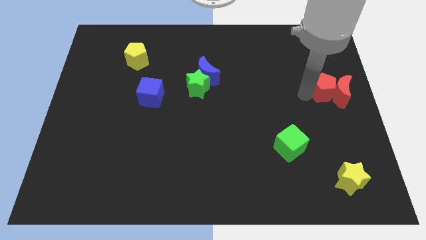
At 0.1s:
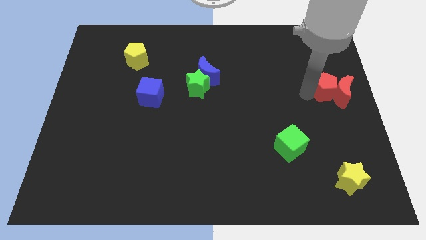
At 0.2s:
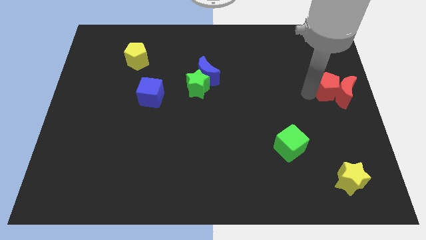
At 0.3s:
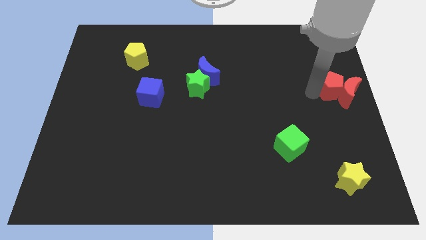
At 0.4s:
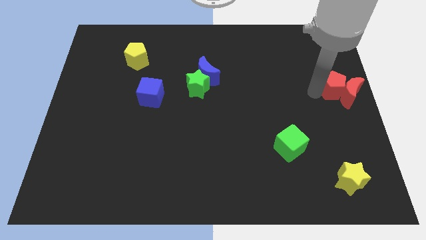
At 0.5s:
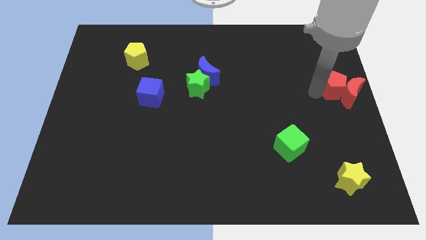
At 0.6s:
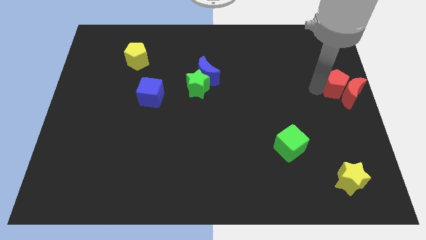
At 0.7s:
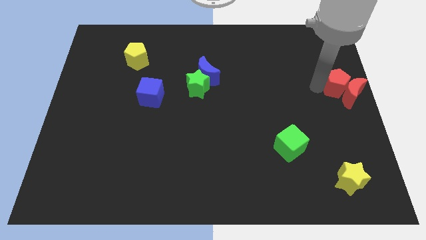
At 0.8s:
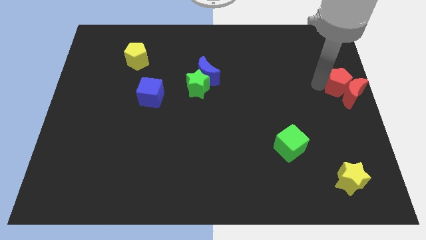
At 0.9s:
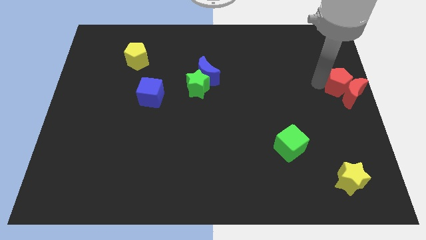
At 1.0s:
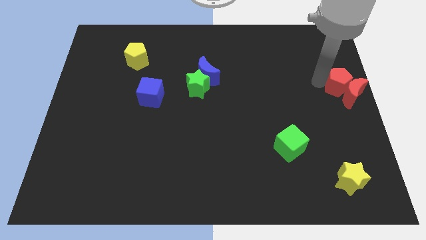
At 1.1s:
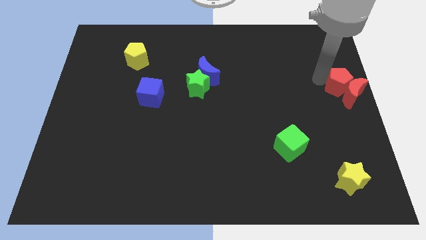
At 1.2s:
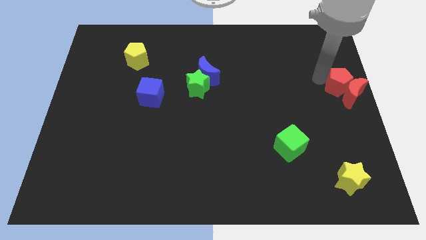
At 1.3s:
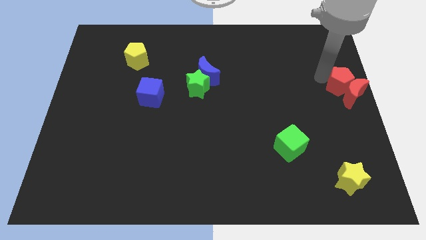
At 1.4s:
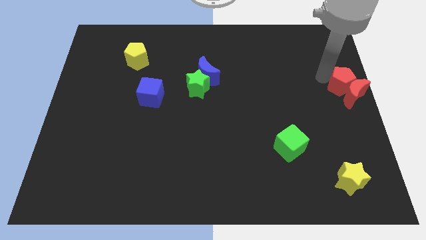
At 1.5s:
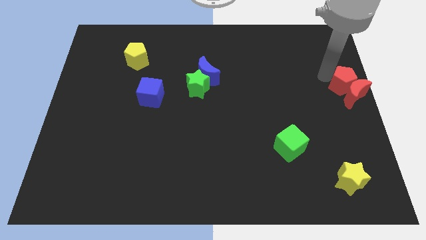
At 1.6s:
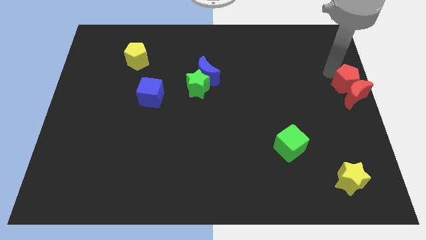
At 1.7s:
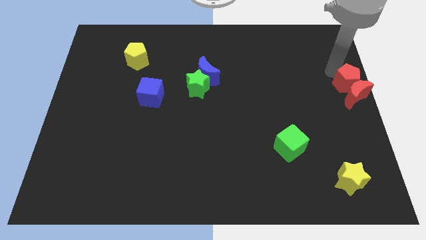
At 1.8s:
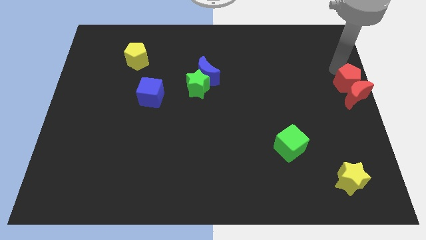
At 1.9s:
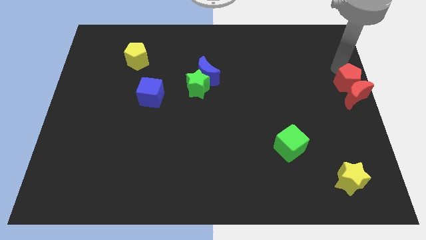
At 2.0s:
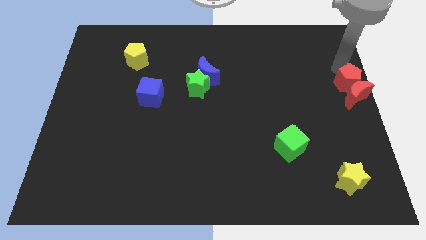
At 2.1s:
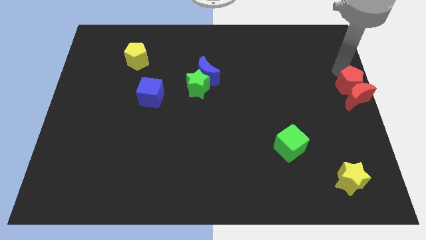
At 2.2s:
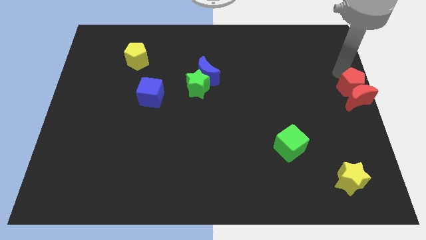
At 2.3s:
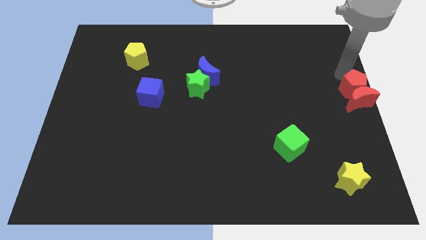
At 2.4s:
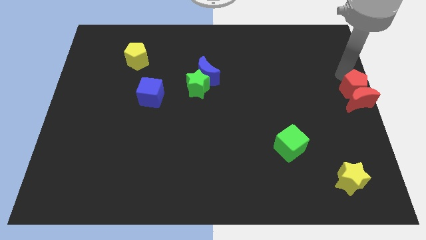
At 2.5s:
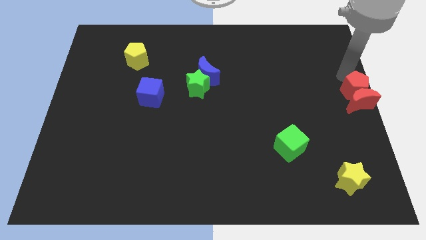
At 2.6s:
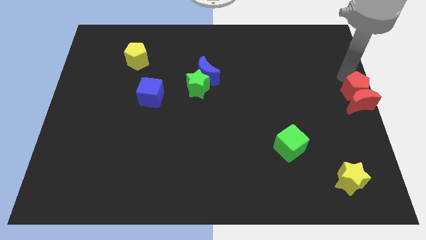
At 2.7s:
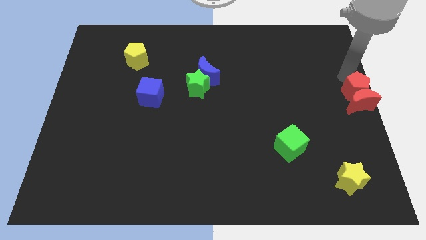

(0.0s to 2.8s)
put the group of red blocks at the center right of the board

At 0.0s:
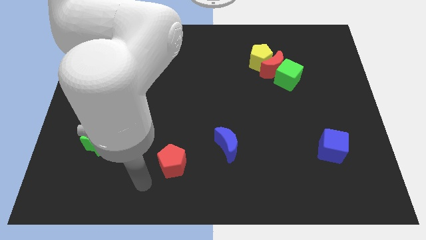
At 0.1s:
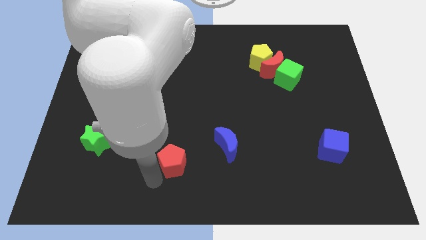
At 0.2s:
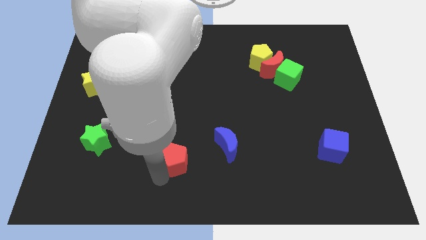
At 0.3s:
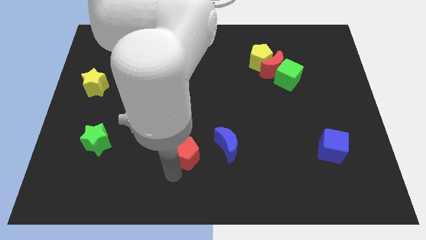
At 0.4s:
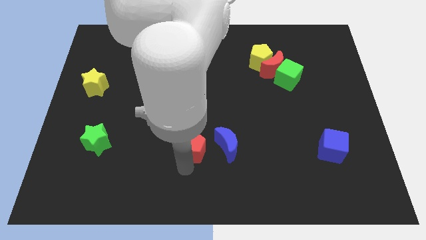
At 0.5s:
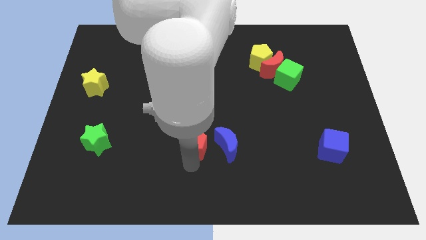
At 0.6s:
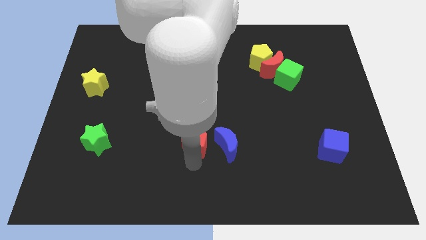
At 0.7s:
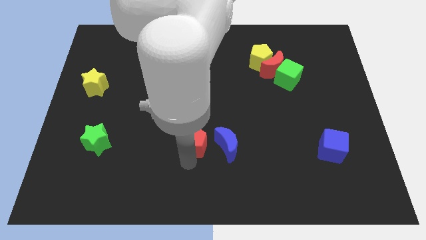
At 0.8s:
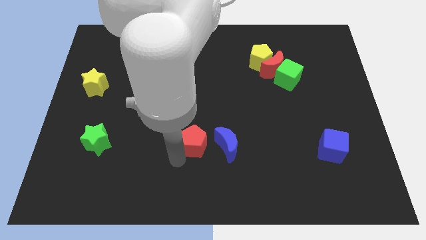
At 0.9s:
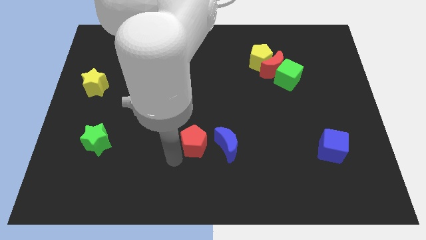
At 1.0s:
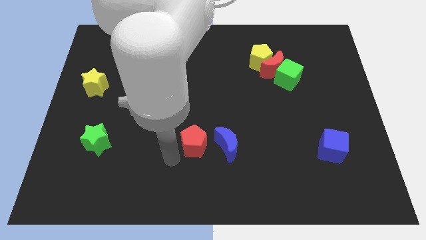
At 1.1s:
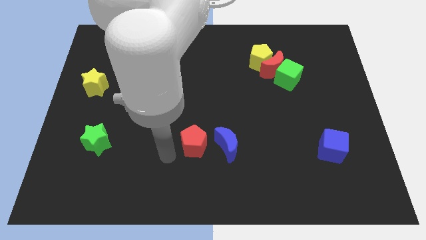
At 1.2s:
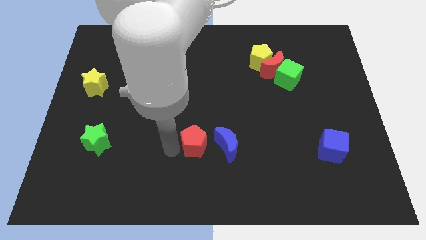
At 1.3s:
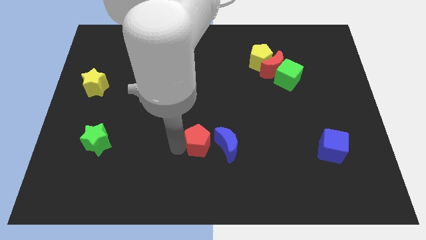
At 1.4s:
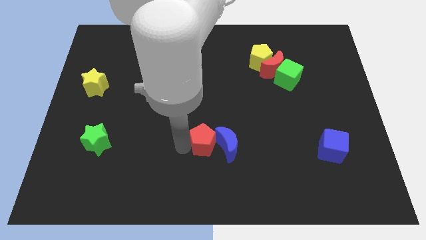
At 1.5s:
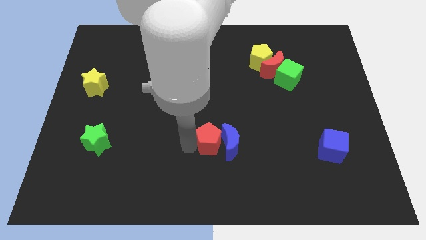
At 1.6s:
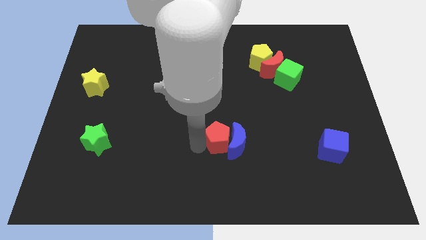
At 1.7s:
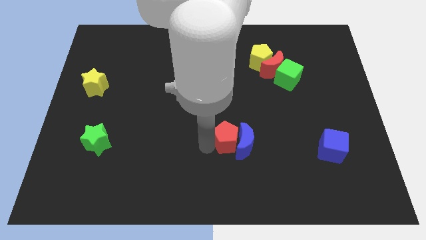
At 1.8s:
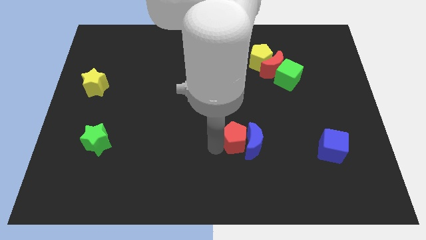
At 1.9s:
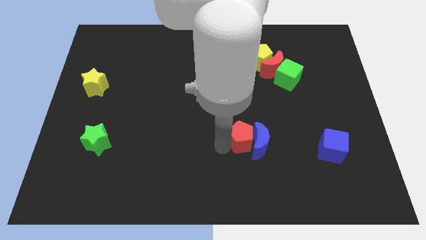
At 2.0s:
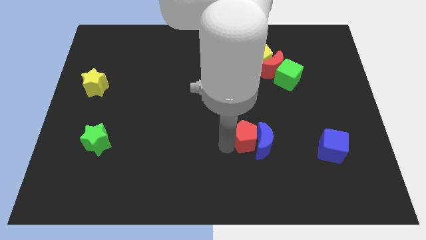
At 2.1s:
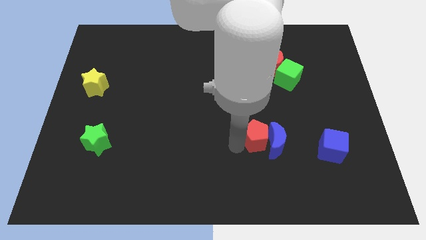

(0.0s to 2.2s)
push the red pentagon with blue moon towards right side

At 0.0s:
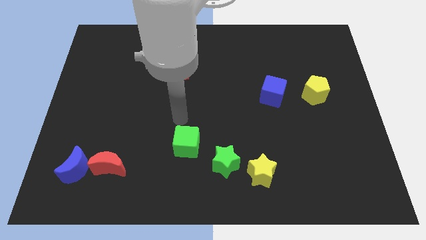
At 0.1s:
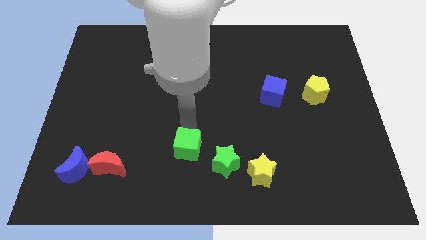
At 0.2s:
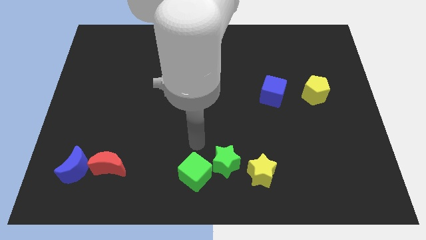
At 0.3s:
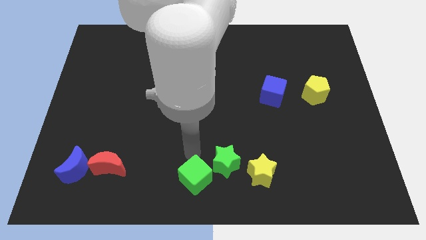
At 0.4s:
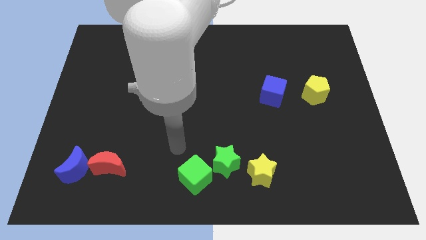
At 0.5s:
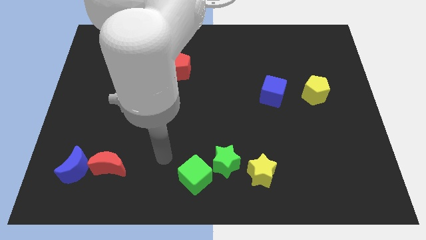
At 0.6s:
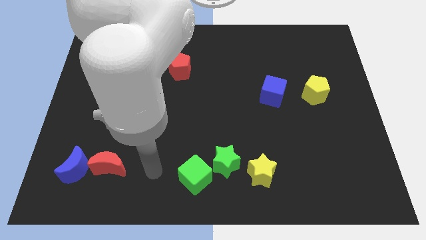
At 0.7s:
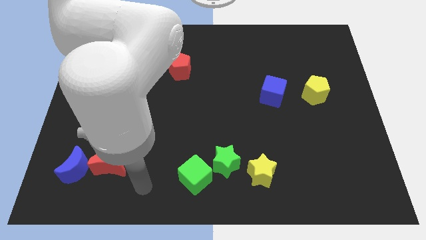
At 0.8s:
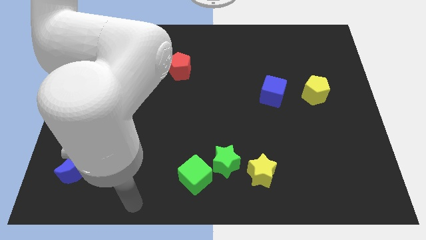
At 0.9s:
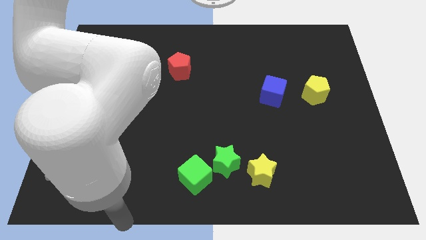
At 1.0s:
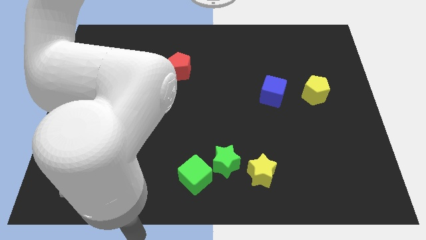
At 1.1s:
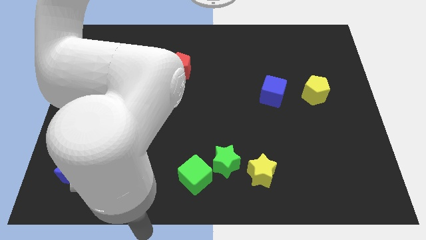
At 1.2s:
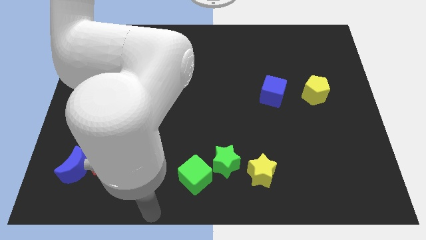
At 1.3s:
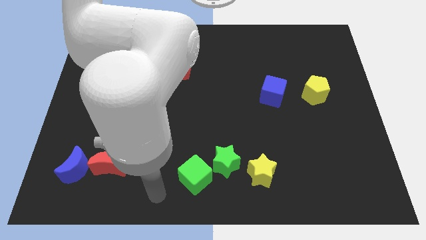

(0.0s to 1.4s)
place the green cube diagonal to the green star

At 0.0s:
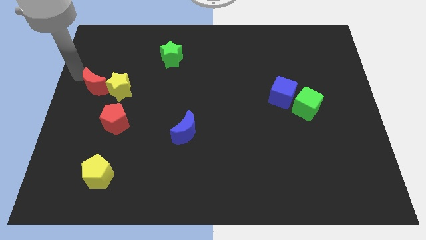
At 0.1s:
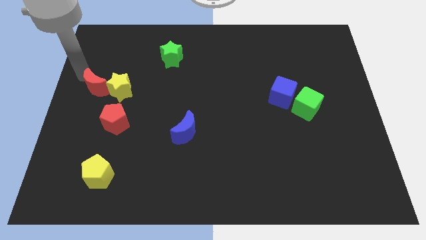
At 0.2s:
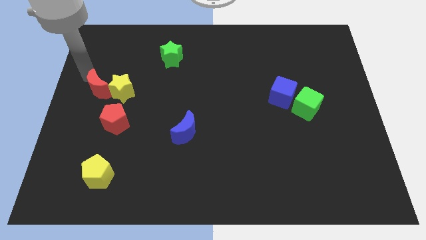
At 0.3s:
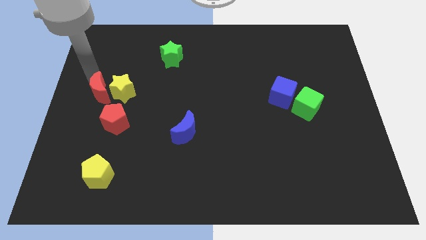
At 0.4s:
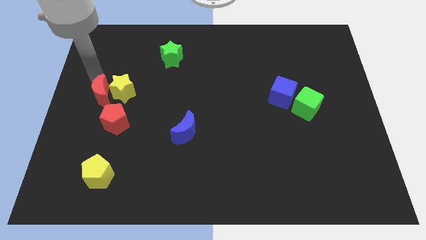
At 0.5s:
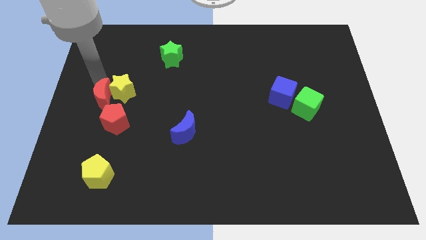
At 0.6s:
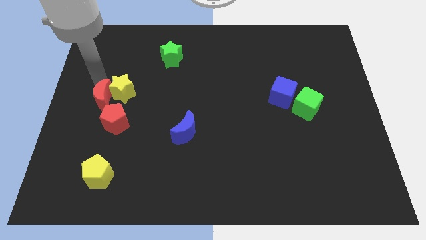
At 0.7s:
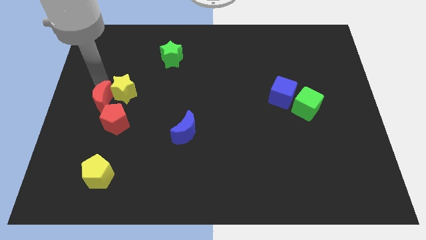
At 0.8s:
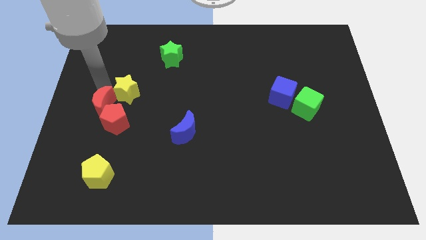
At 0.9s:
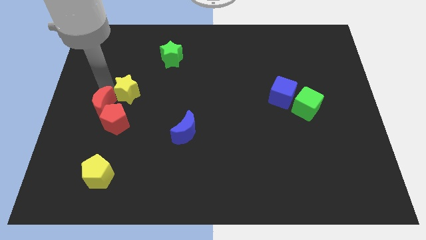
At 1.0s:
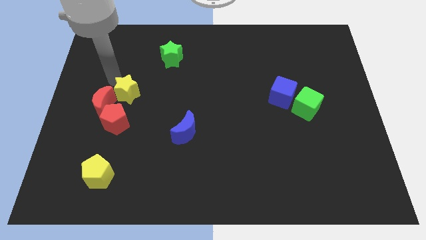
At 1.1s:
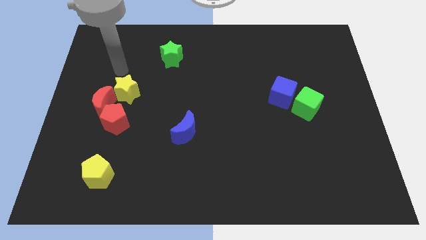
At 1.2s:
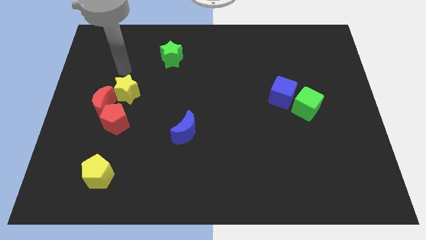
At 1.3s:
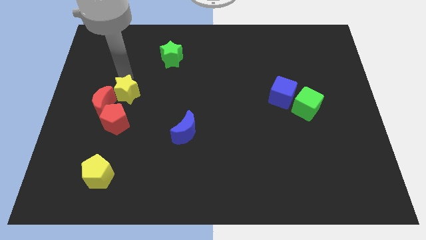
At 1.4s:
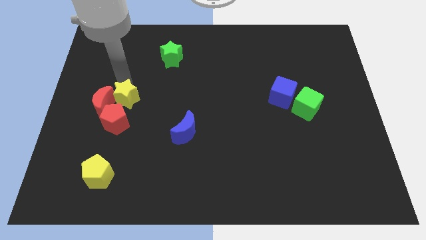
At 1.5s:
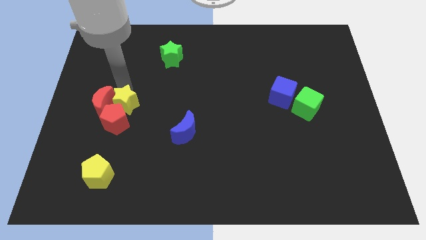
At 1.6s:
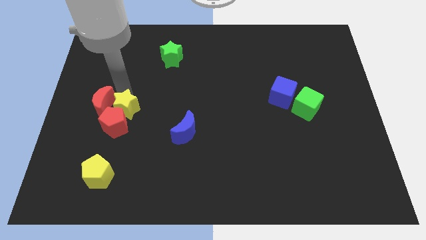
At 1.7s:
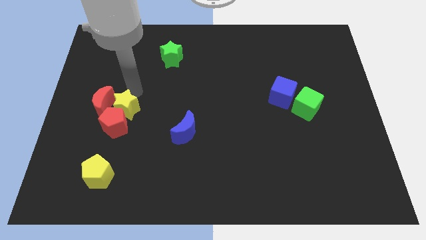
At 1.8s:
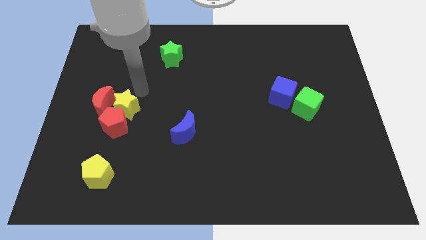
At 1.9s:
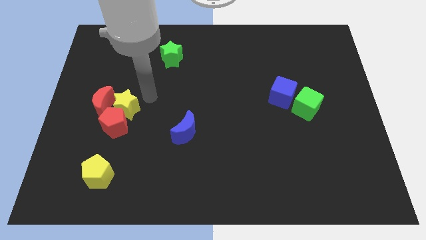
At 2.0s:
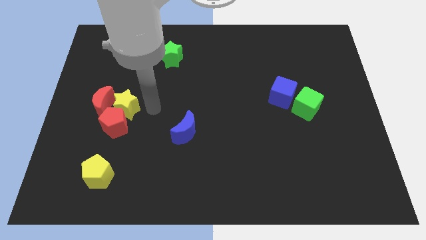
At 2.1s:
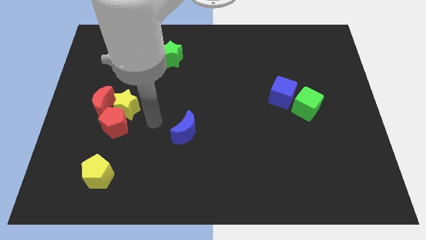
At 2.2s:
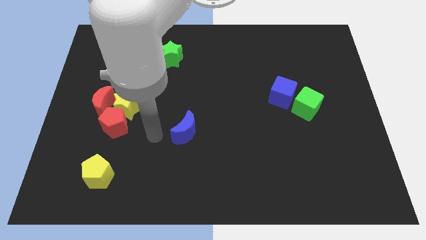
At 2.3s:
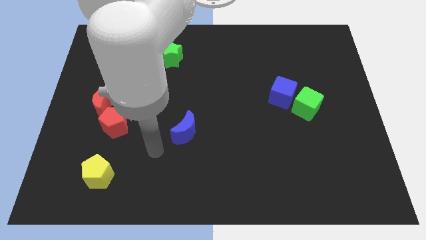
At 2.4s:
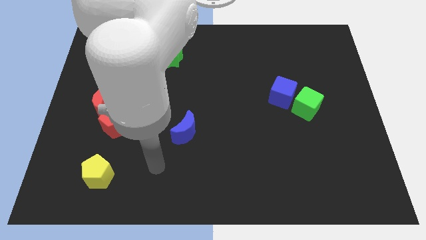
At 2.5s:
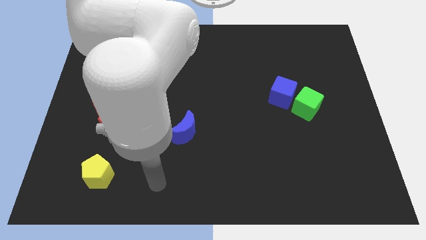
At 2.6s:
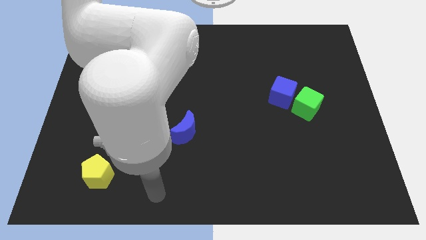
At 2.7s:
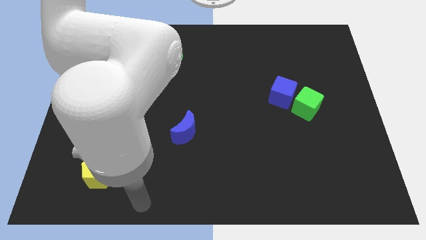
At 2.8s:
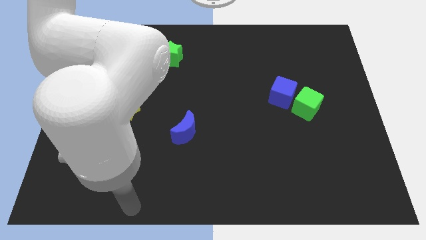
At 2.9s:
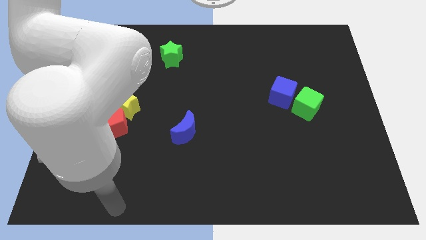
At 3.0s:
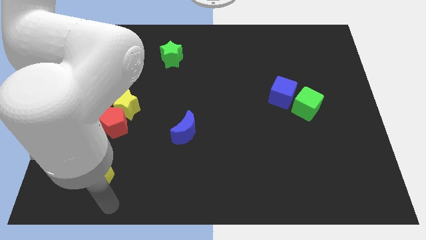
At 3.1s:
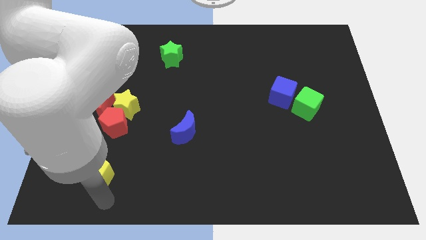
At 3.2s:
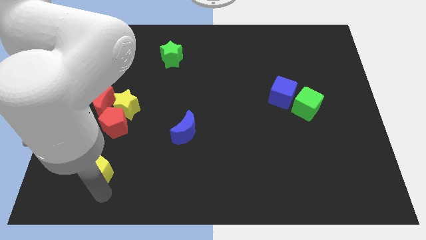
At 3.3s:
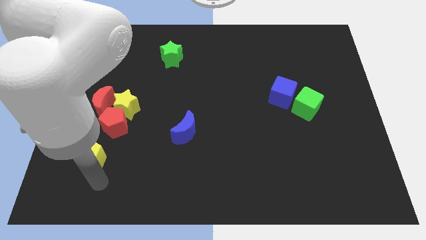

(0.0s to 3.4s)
slightly push the yellow block towards the top side of red pentagon
